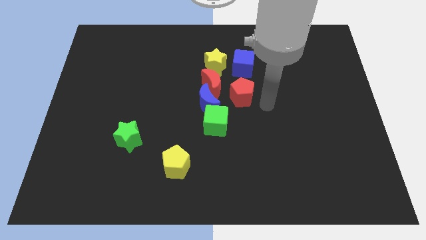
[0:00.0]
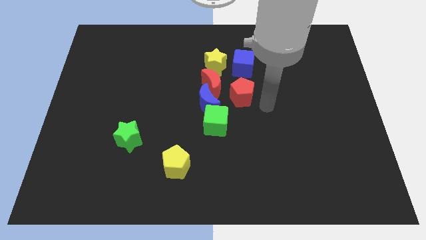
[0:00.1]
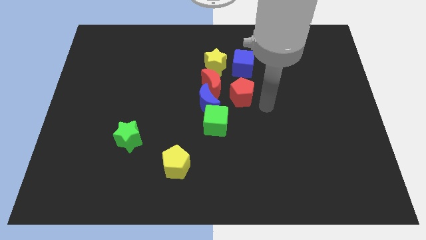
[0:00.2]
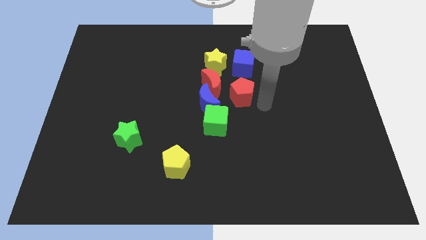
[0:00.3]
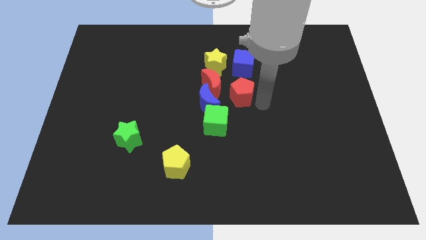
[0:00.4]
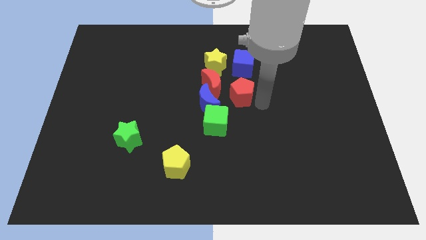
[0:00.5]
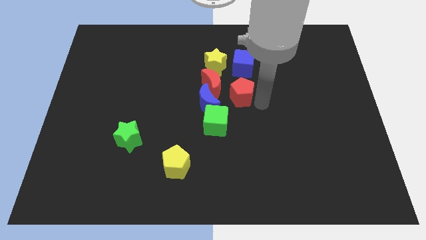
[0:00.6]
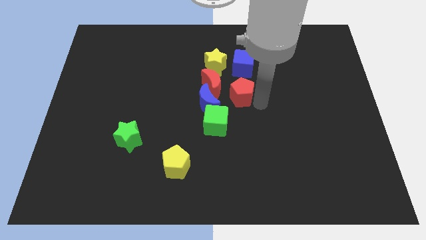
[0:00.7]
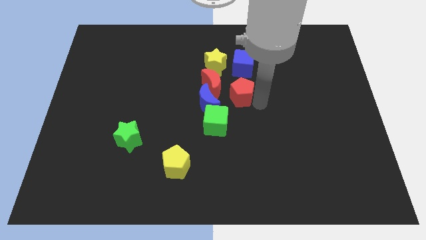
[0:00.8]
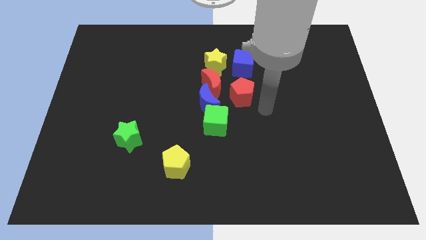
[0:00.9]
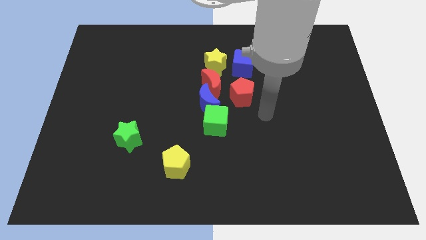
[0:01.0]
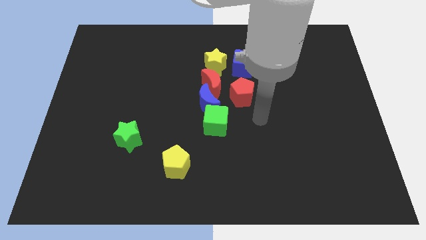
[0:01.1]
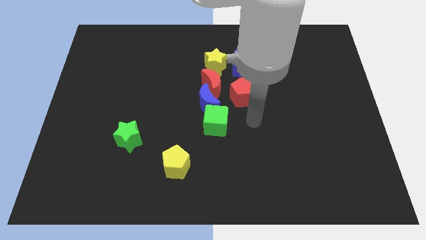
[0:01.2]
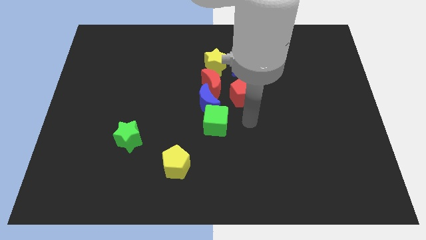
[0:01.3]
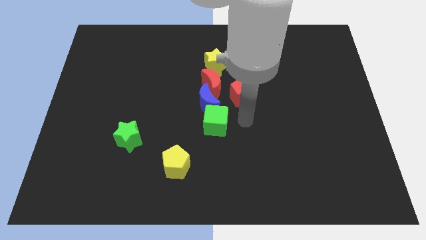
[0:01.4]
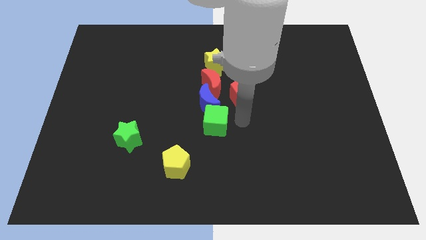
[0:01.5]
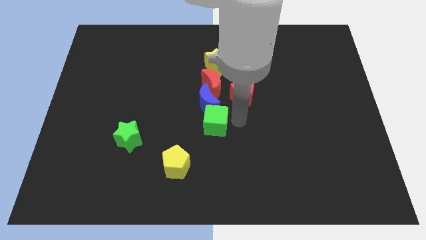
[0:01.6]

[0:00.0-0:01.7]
point your arm to the right side of blue cube

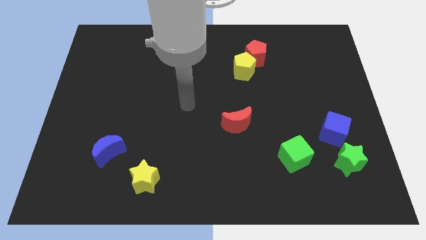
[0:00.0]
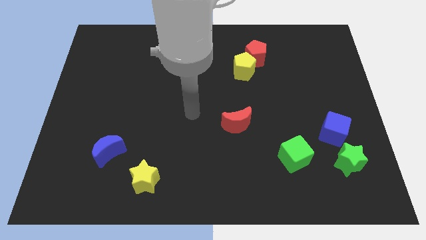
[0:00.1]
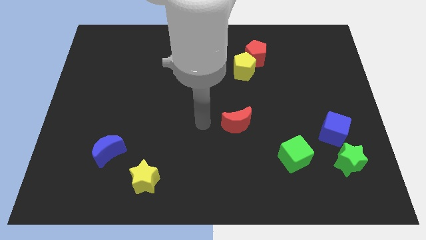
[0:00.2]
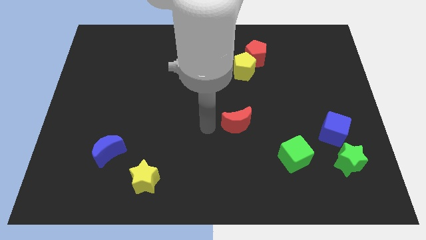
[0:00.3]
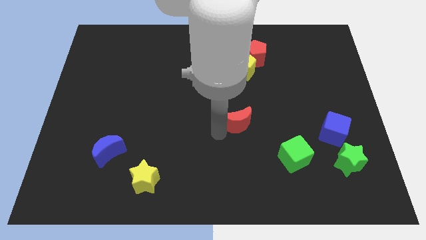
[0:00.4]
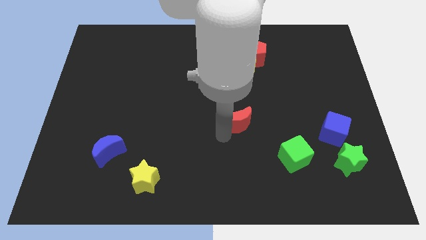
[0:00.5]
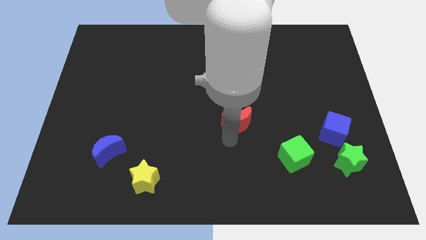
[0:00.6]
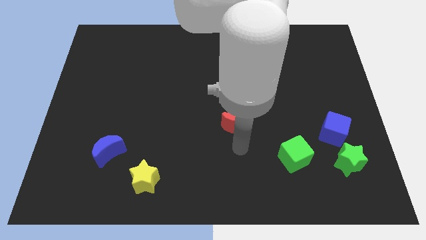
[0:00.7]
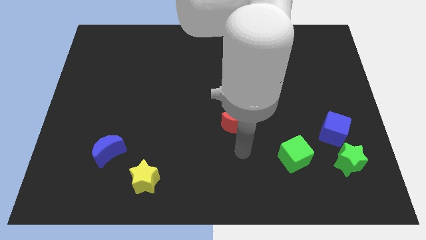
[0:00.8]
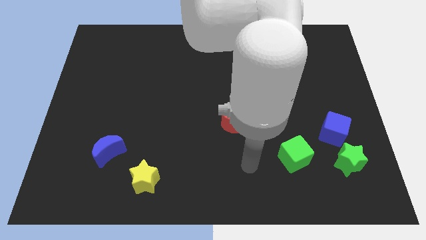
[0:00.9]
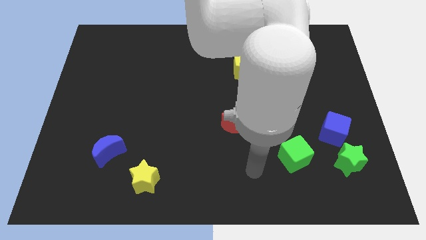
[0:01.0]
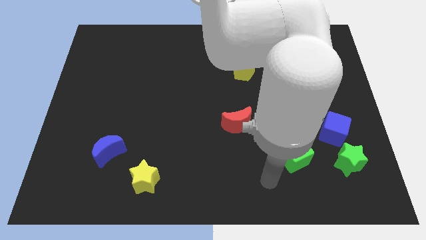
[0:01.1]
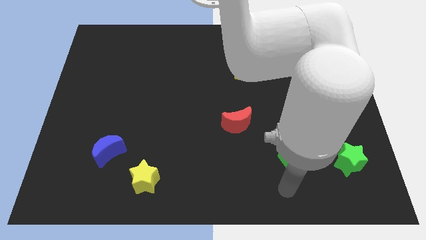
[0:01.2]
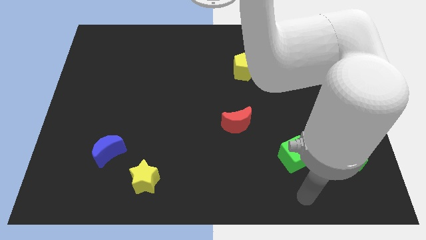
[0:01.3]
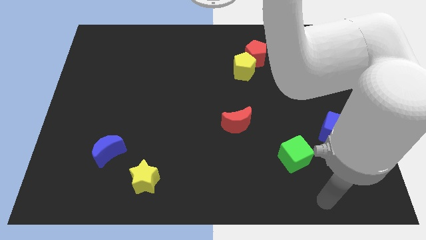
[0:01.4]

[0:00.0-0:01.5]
move your hand to the bottom side of the green cube

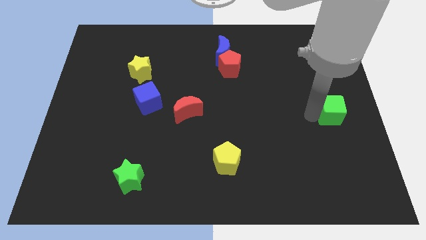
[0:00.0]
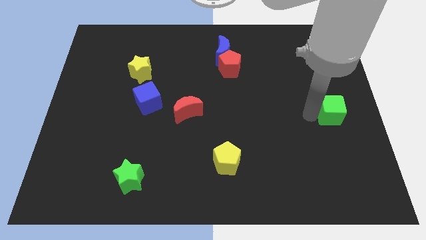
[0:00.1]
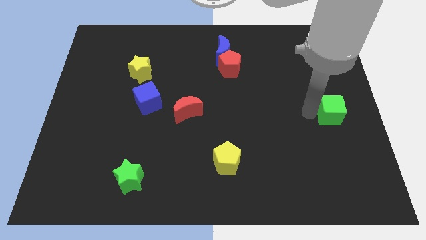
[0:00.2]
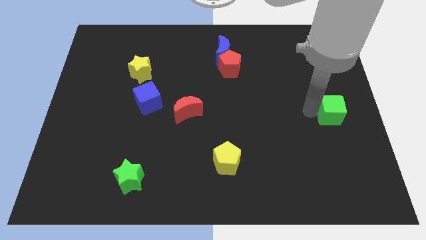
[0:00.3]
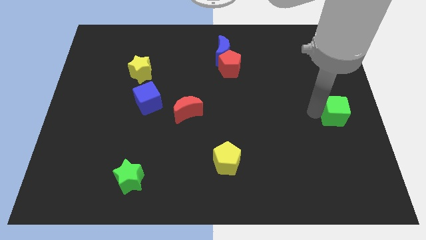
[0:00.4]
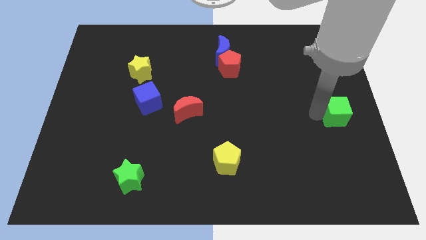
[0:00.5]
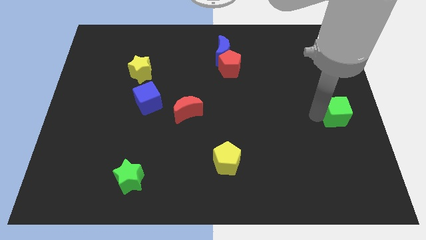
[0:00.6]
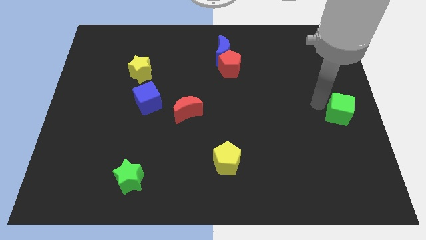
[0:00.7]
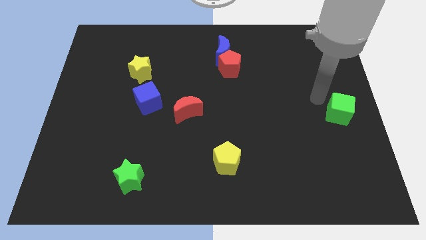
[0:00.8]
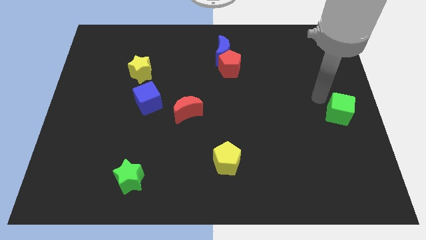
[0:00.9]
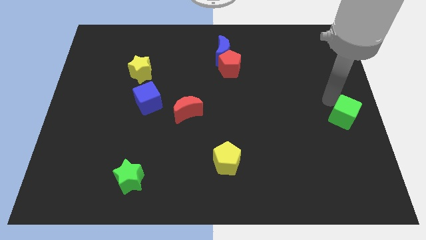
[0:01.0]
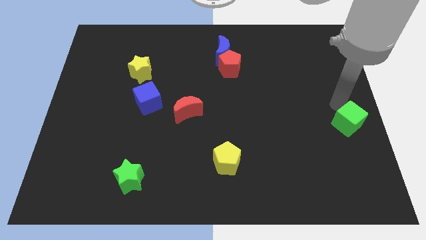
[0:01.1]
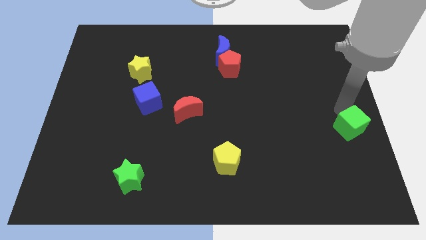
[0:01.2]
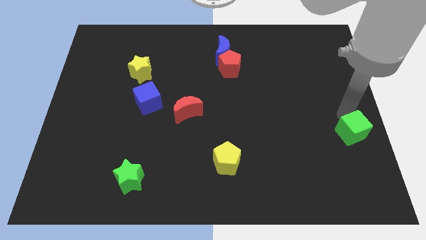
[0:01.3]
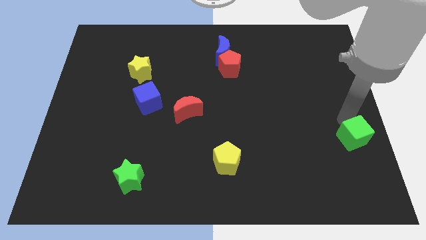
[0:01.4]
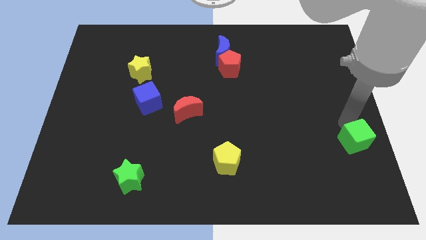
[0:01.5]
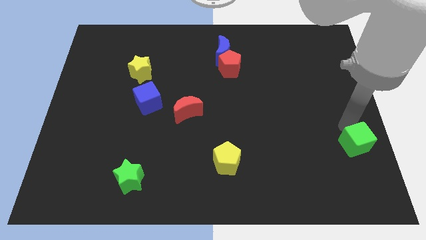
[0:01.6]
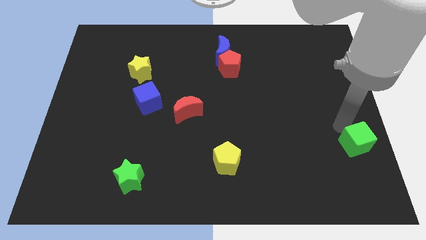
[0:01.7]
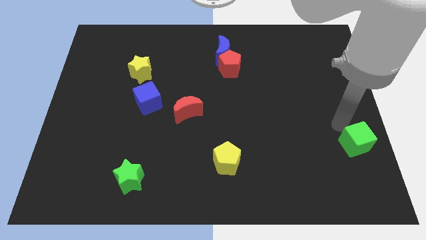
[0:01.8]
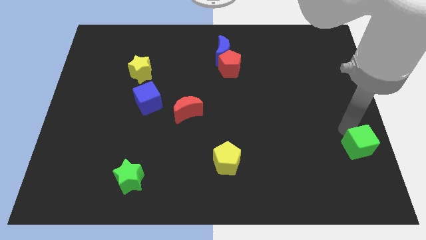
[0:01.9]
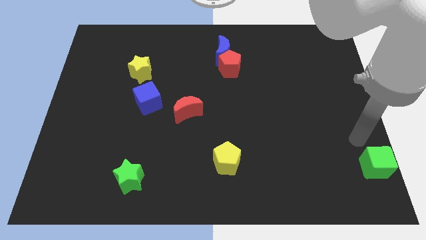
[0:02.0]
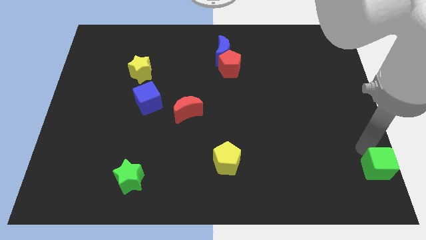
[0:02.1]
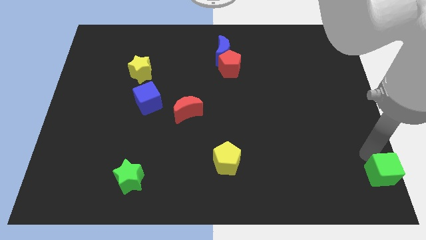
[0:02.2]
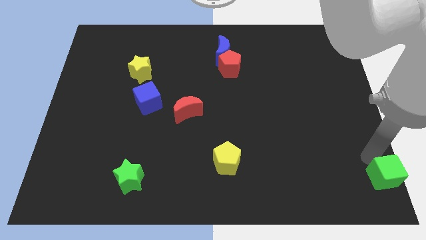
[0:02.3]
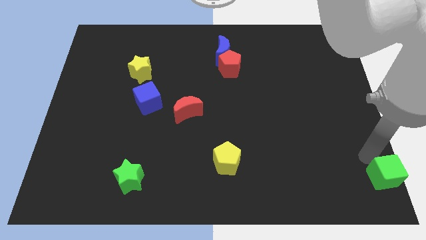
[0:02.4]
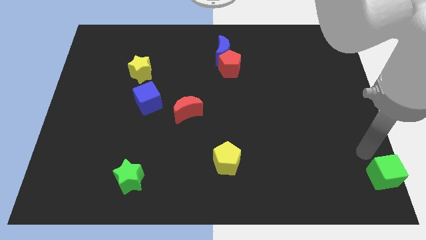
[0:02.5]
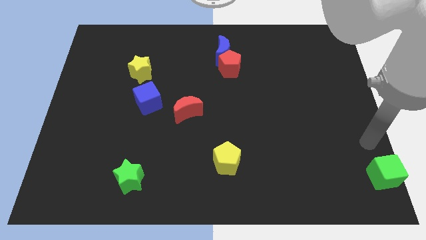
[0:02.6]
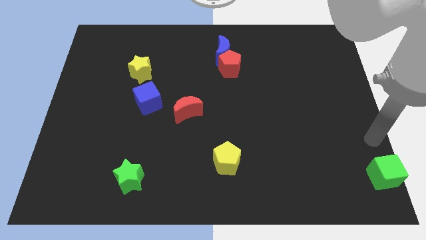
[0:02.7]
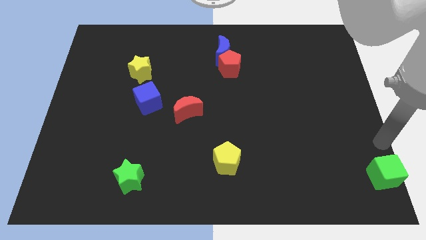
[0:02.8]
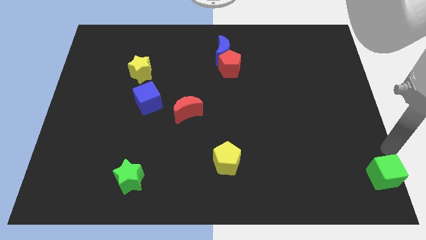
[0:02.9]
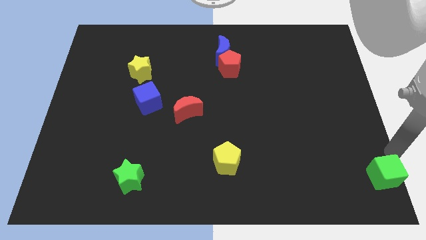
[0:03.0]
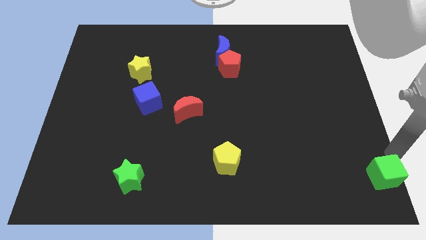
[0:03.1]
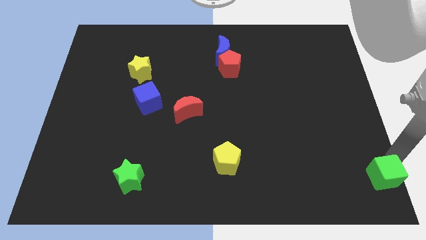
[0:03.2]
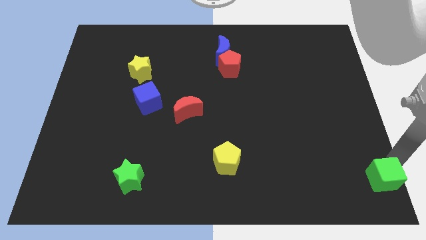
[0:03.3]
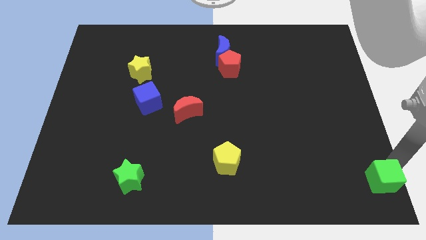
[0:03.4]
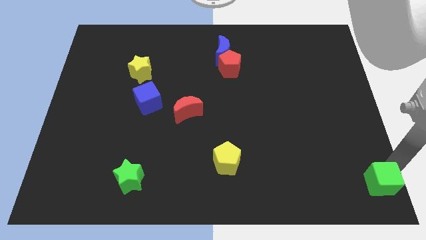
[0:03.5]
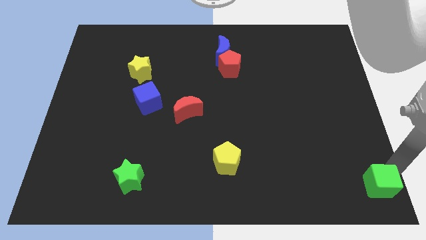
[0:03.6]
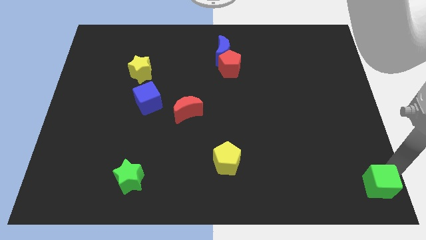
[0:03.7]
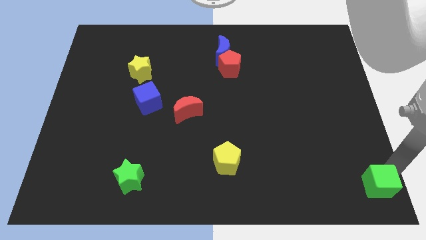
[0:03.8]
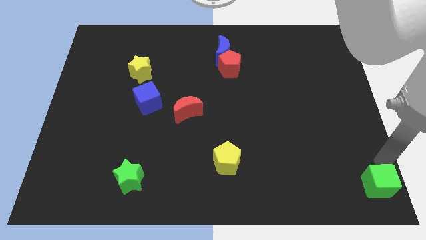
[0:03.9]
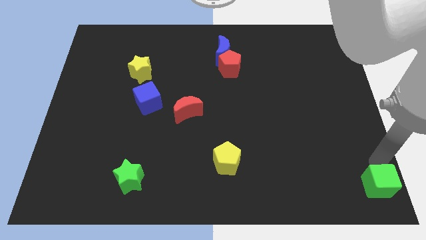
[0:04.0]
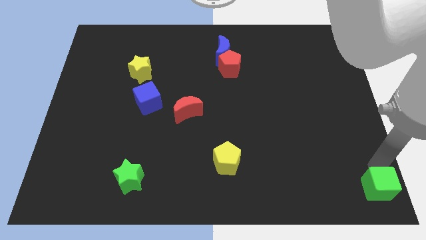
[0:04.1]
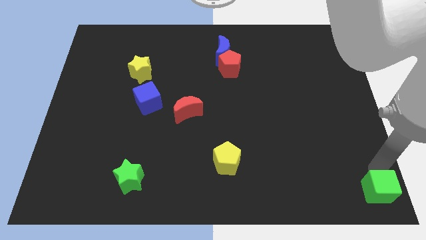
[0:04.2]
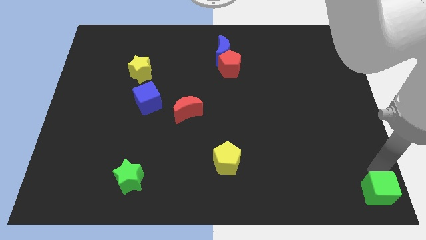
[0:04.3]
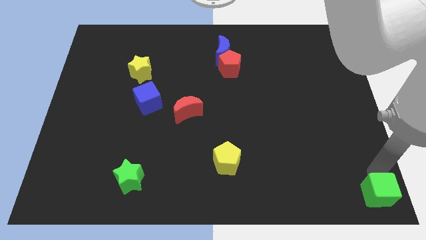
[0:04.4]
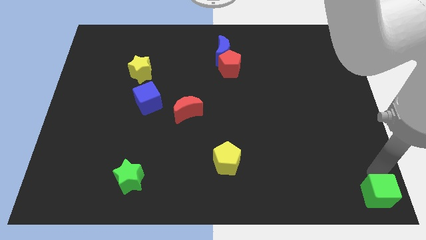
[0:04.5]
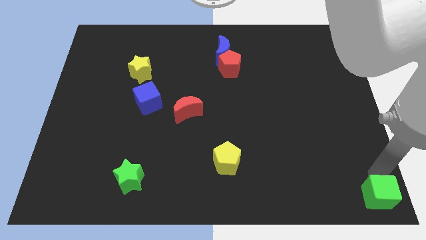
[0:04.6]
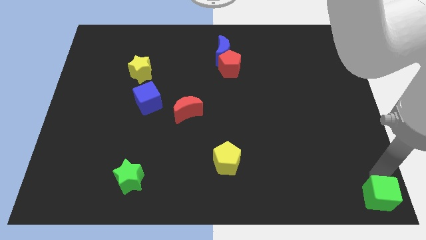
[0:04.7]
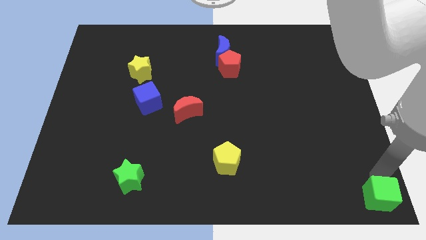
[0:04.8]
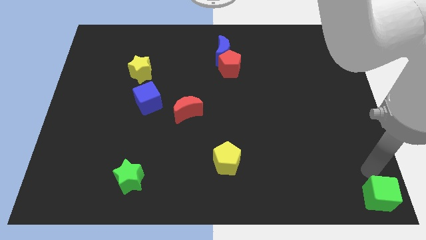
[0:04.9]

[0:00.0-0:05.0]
place green cube towards bottom right corner

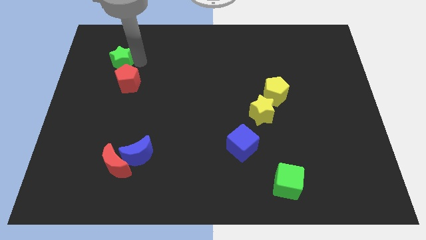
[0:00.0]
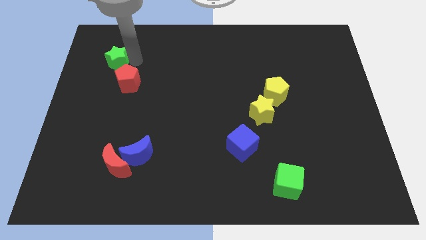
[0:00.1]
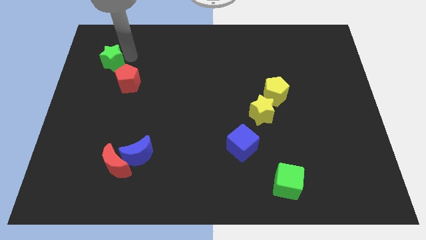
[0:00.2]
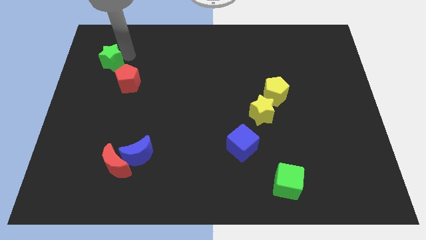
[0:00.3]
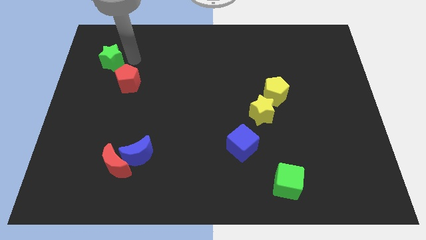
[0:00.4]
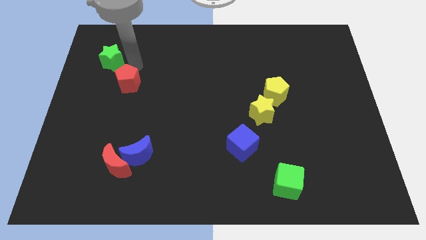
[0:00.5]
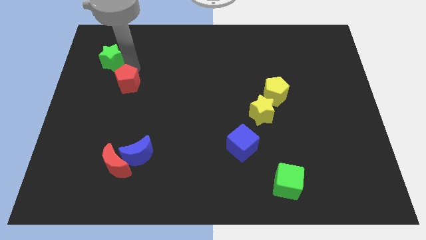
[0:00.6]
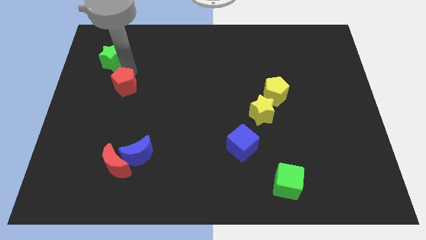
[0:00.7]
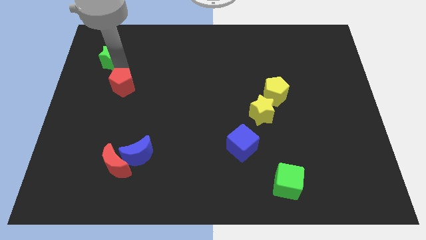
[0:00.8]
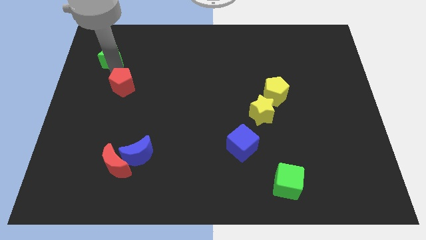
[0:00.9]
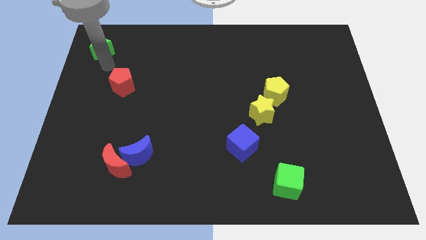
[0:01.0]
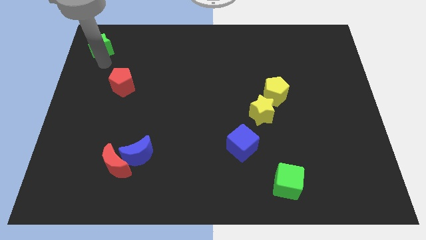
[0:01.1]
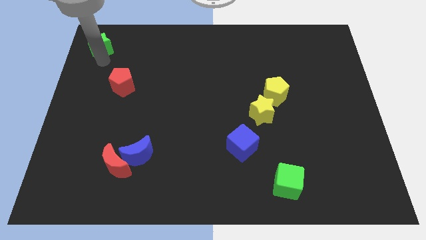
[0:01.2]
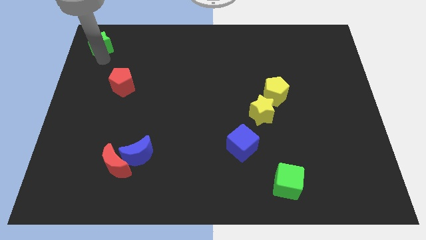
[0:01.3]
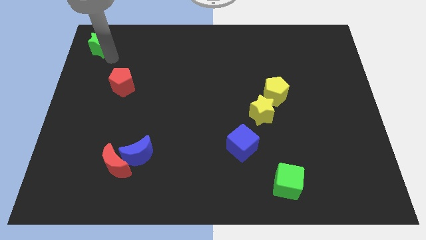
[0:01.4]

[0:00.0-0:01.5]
separate the green star from the red pentagon
